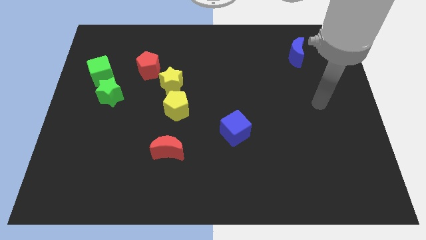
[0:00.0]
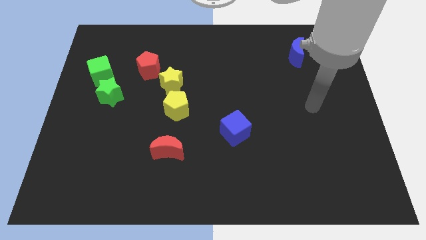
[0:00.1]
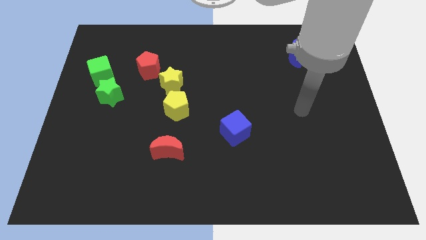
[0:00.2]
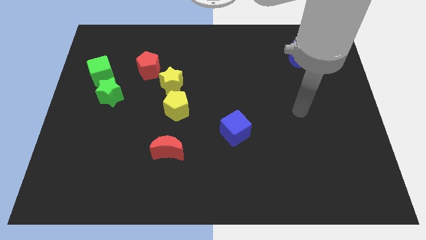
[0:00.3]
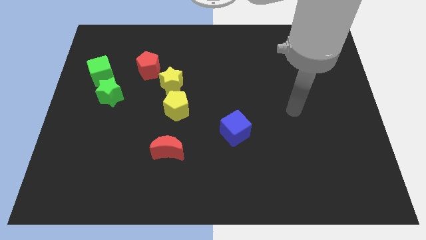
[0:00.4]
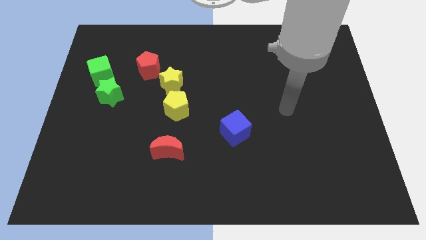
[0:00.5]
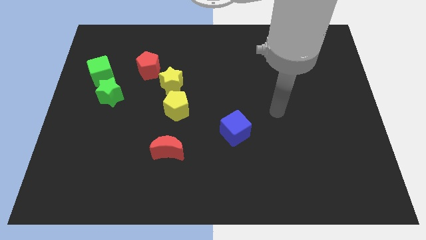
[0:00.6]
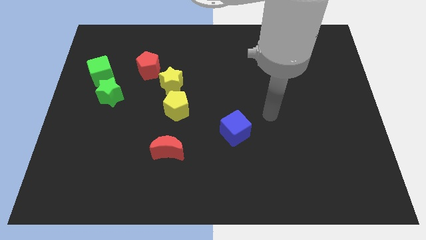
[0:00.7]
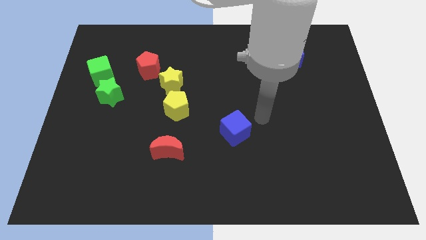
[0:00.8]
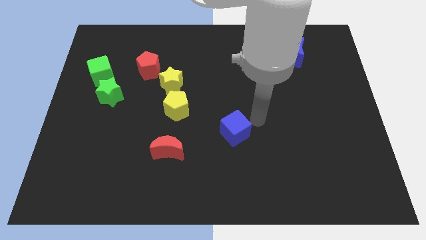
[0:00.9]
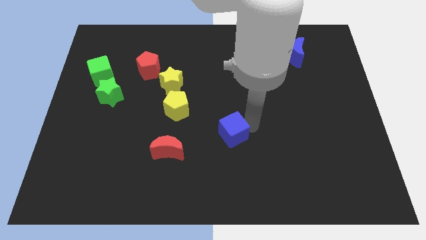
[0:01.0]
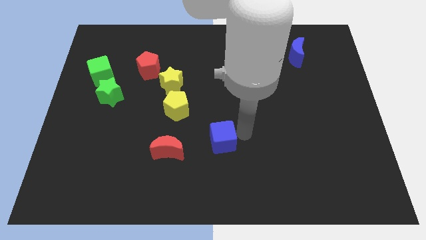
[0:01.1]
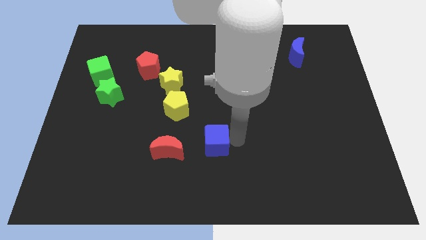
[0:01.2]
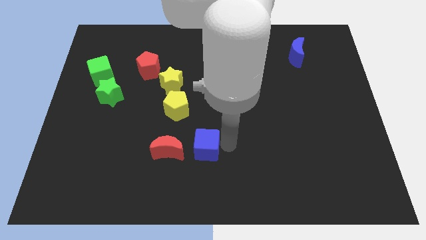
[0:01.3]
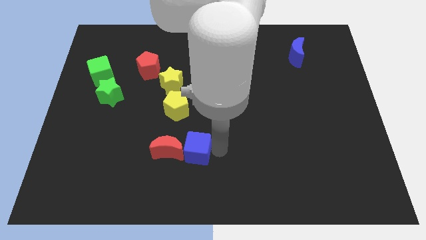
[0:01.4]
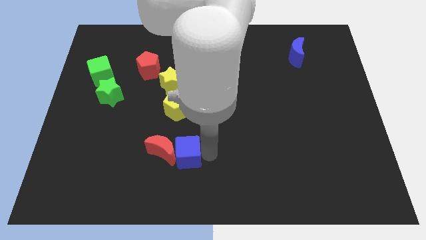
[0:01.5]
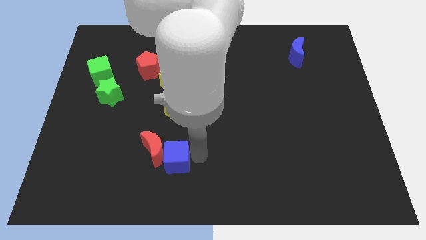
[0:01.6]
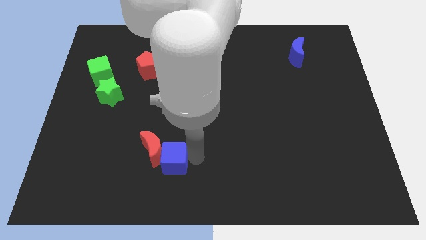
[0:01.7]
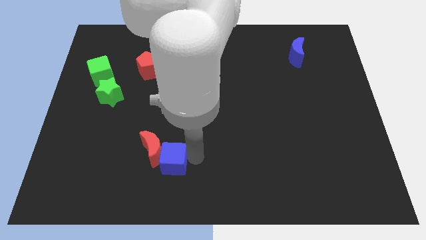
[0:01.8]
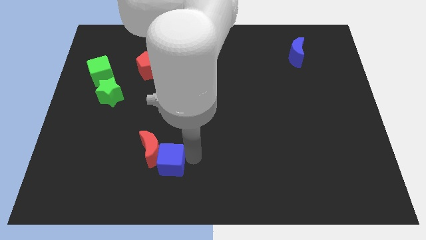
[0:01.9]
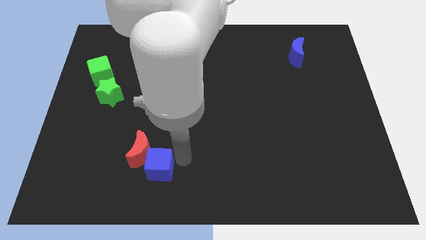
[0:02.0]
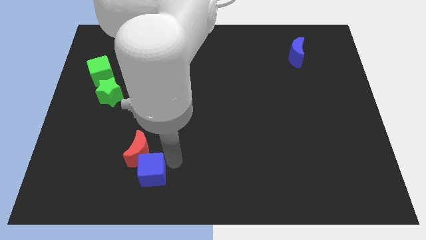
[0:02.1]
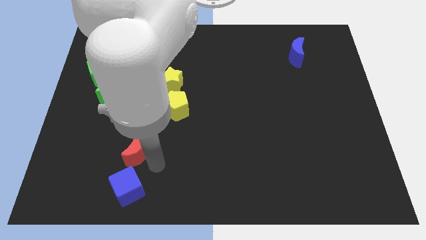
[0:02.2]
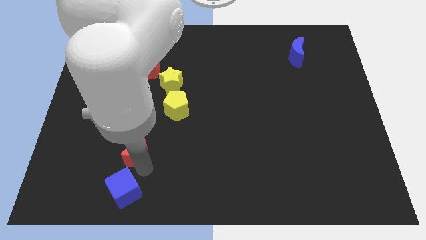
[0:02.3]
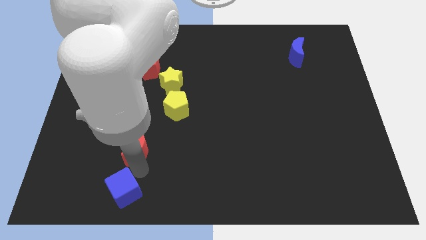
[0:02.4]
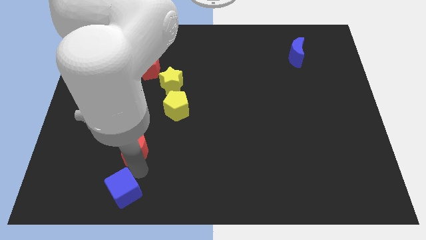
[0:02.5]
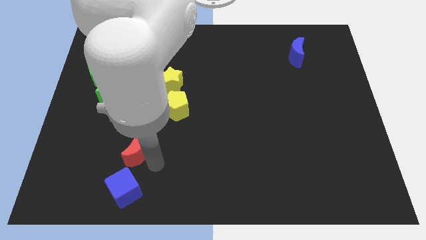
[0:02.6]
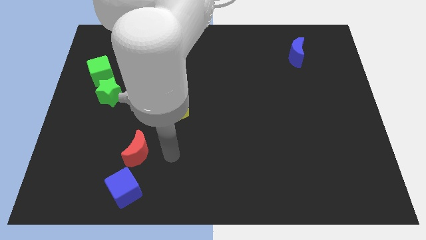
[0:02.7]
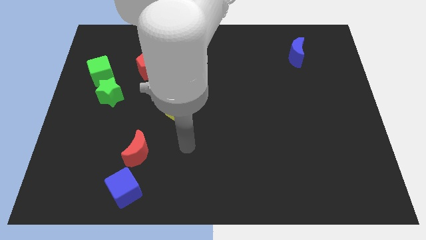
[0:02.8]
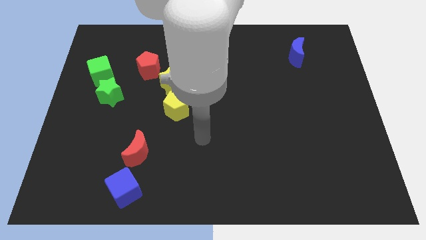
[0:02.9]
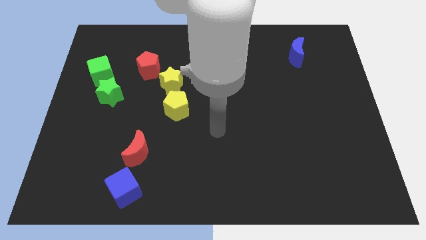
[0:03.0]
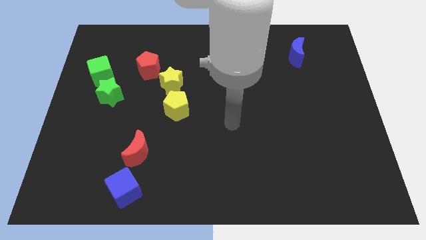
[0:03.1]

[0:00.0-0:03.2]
place blue cube to the left side

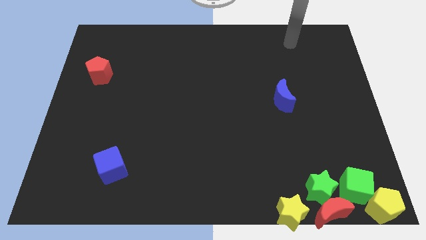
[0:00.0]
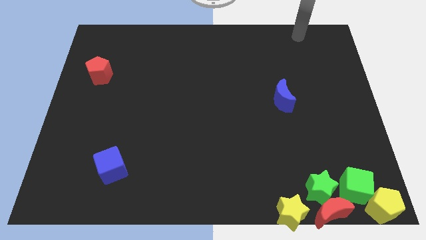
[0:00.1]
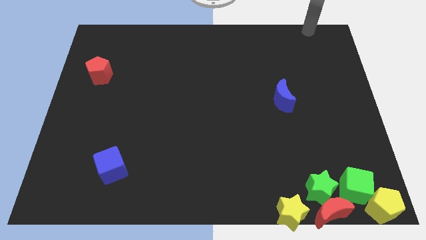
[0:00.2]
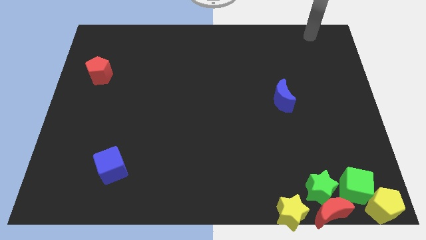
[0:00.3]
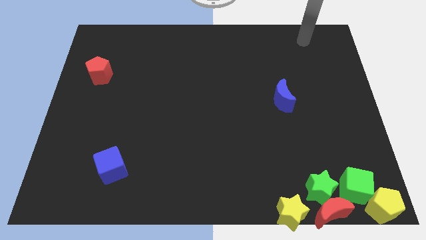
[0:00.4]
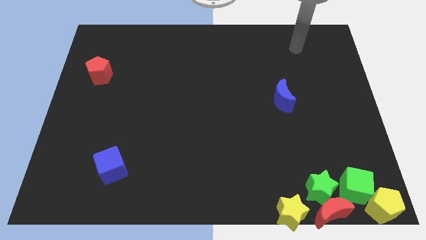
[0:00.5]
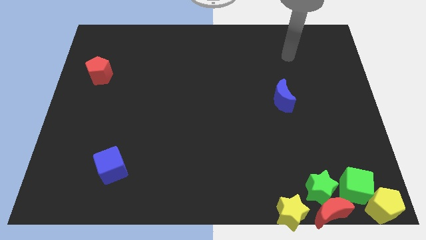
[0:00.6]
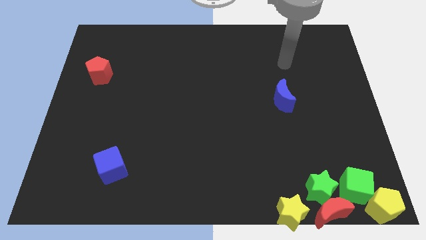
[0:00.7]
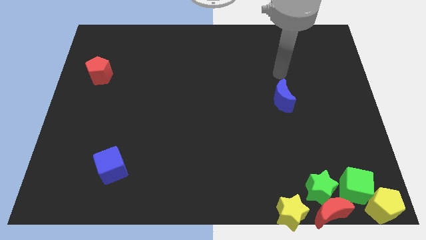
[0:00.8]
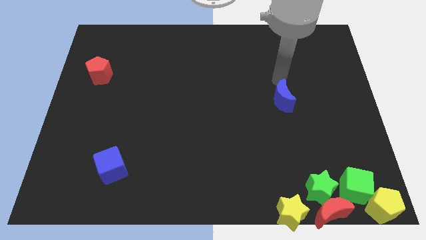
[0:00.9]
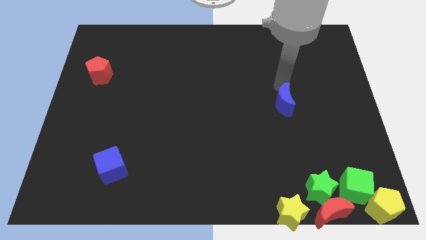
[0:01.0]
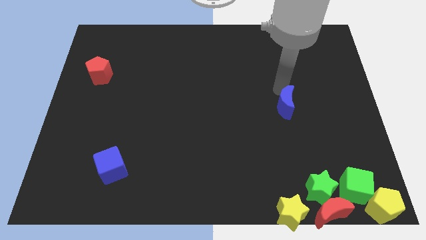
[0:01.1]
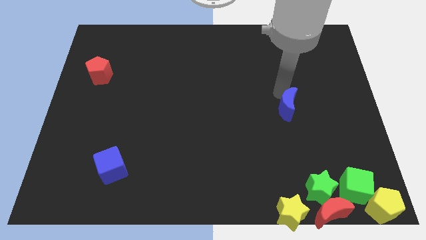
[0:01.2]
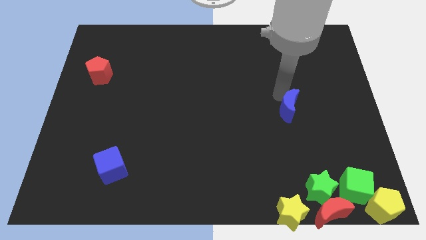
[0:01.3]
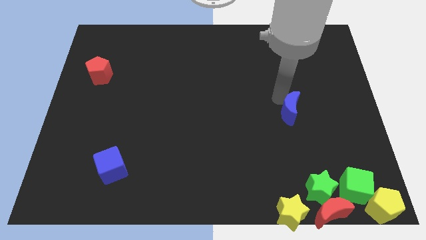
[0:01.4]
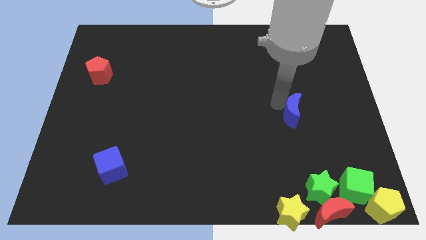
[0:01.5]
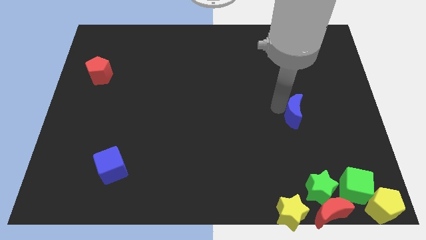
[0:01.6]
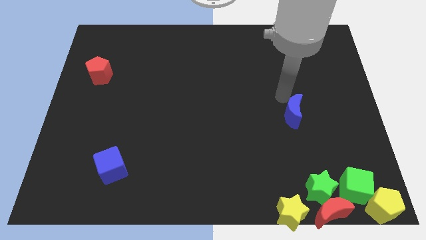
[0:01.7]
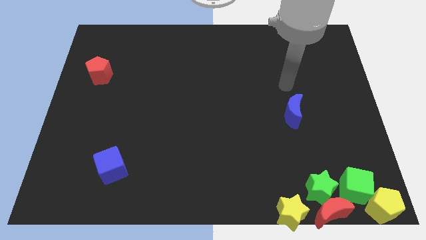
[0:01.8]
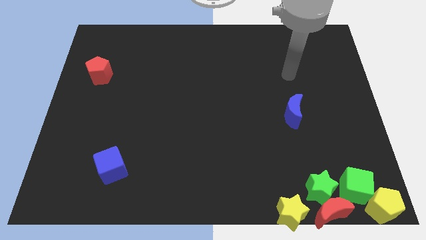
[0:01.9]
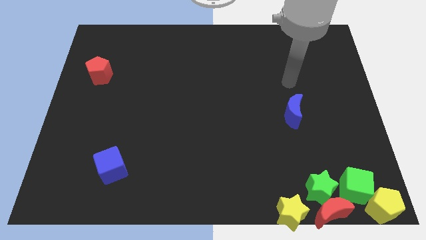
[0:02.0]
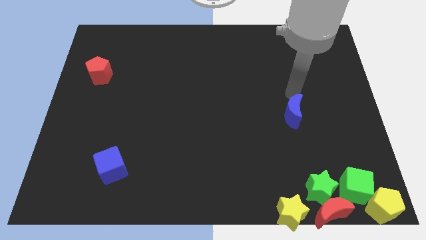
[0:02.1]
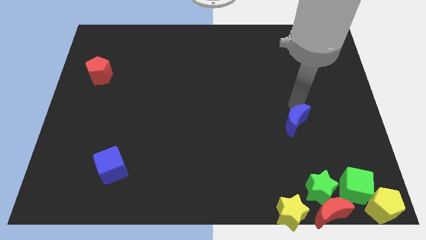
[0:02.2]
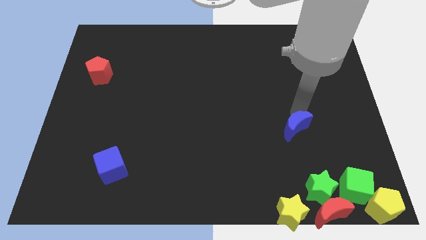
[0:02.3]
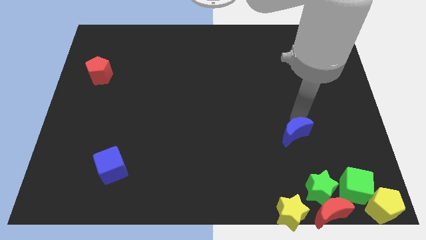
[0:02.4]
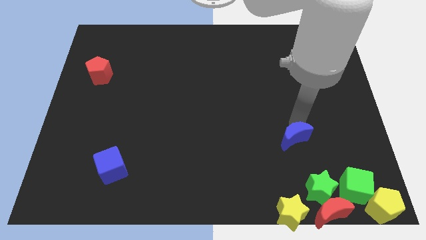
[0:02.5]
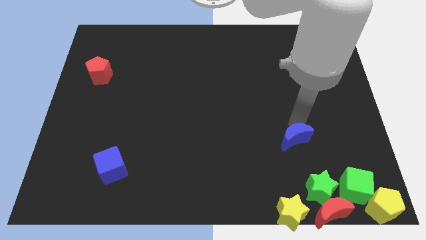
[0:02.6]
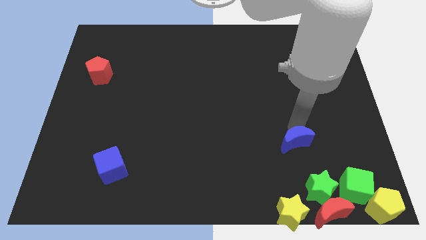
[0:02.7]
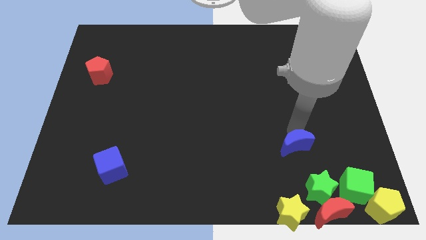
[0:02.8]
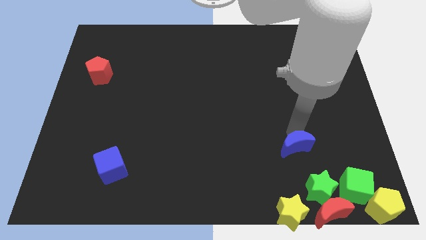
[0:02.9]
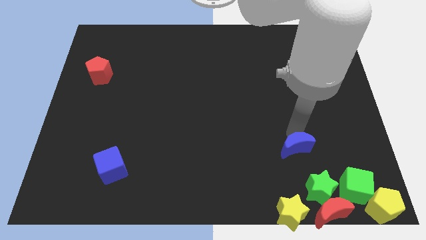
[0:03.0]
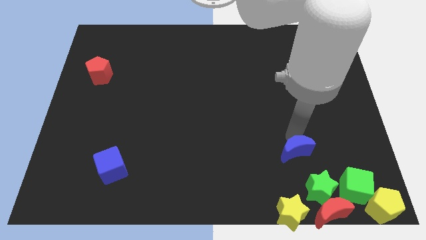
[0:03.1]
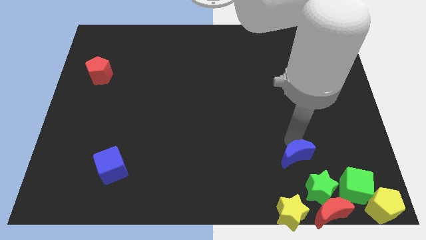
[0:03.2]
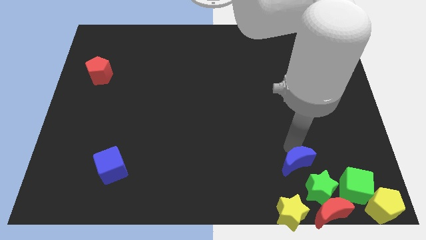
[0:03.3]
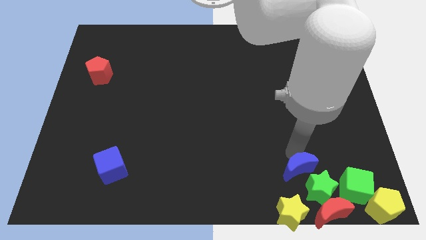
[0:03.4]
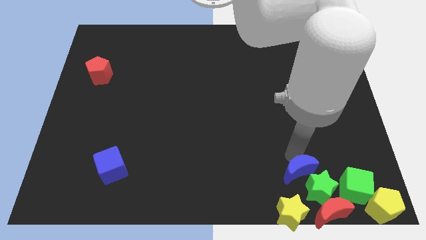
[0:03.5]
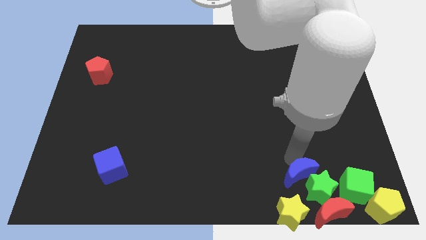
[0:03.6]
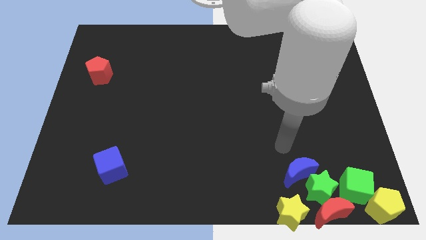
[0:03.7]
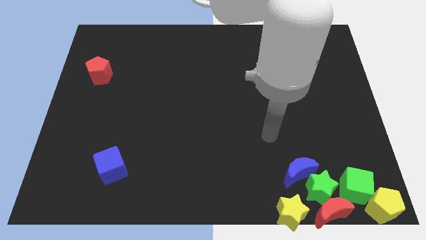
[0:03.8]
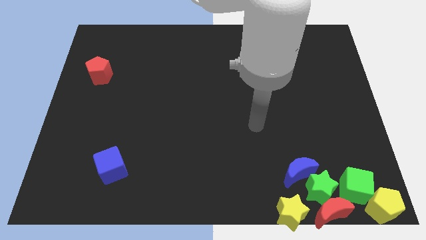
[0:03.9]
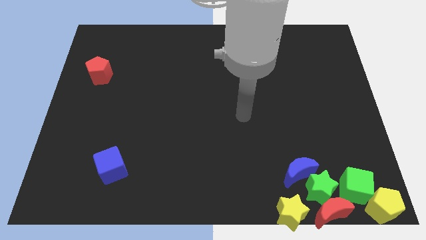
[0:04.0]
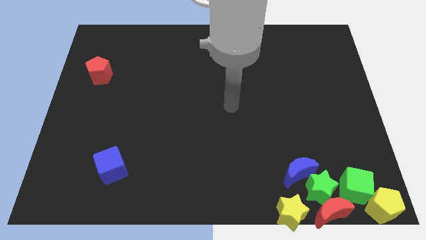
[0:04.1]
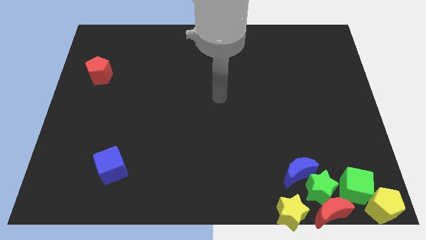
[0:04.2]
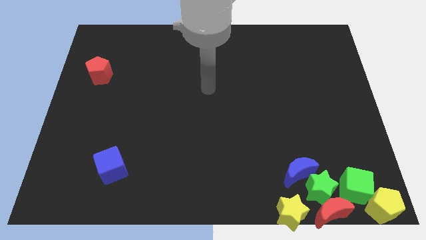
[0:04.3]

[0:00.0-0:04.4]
move the blue crescent close to the green star

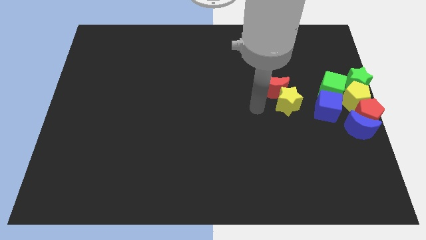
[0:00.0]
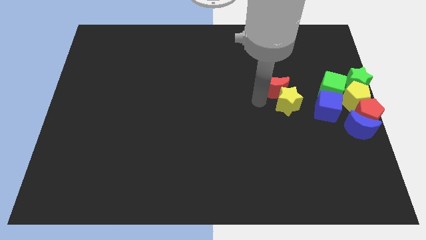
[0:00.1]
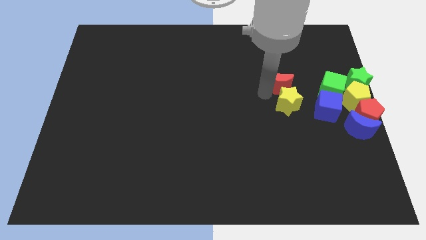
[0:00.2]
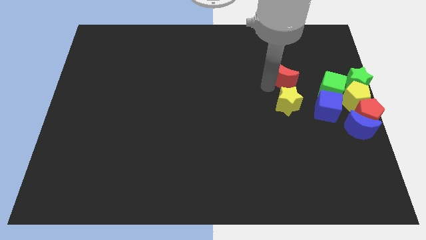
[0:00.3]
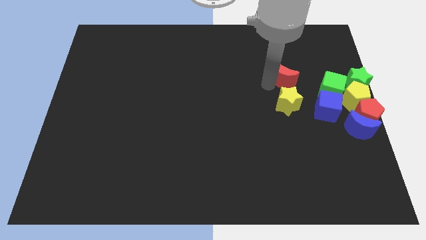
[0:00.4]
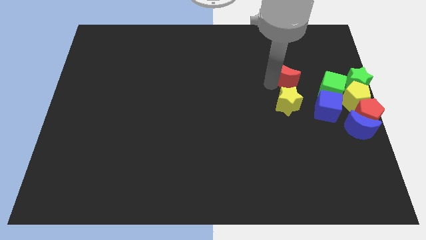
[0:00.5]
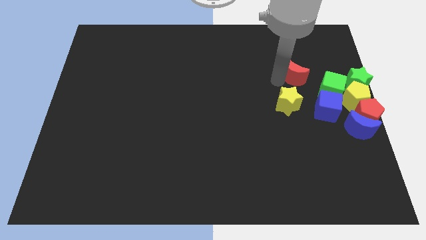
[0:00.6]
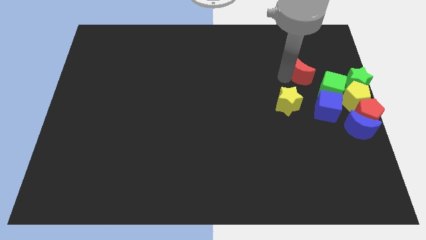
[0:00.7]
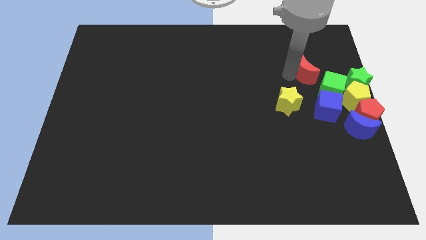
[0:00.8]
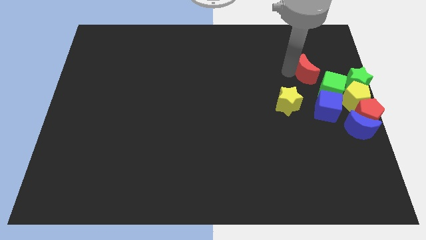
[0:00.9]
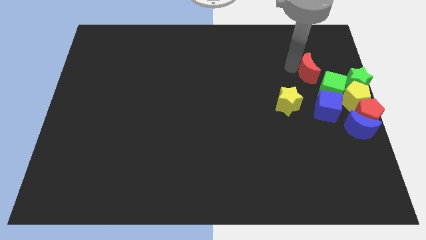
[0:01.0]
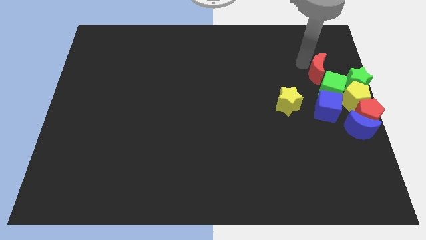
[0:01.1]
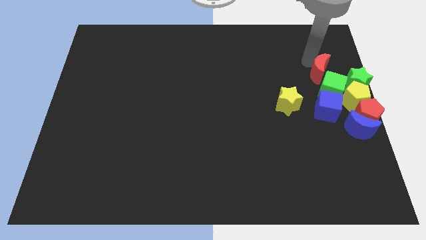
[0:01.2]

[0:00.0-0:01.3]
move the red crescent away from the yellow star

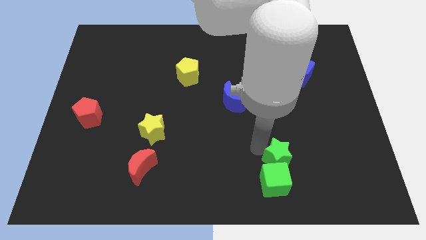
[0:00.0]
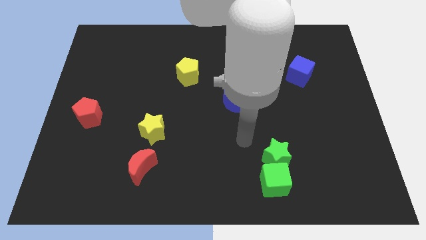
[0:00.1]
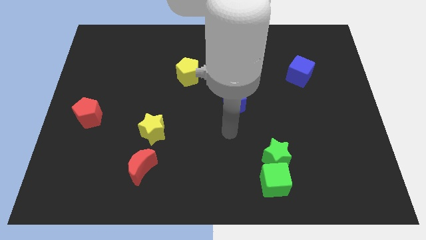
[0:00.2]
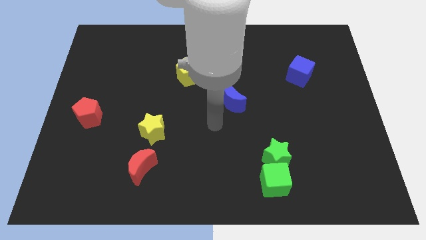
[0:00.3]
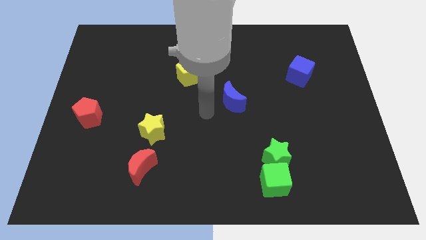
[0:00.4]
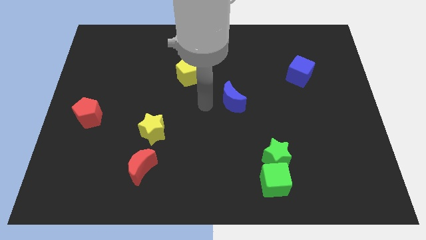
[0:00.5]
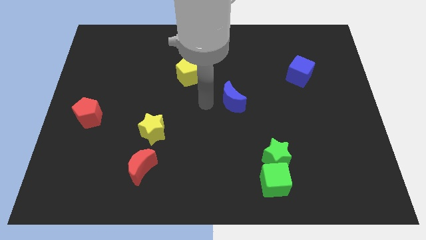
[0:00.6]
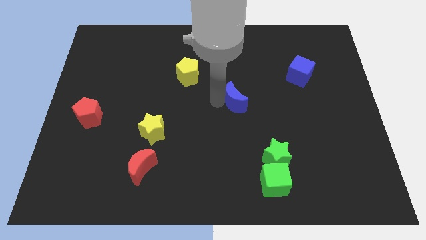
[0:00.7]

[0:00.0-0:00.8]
place your arm to the left of the blue moon
